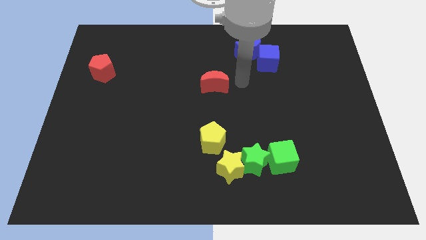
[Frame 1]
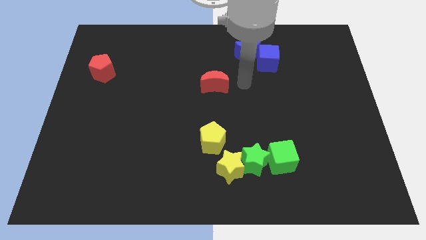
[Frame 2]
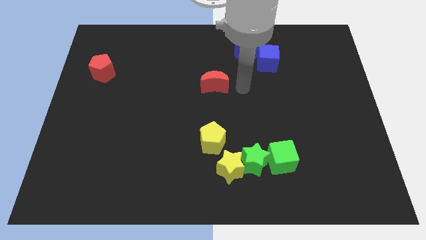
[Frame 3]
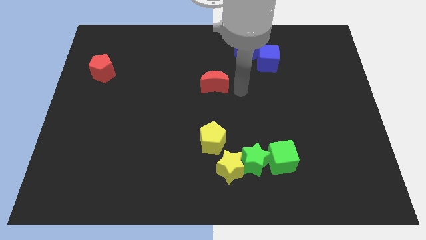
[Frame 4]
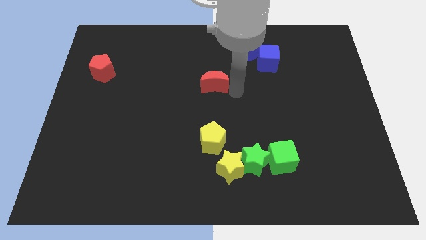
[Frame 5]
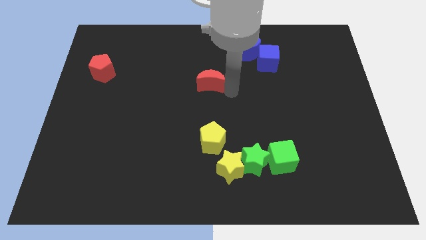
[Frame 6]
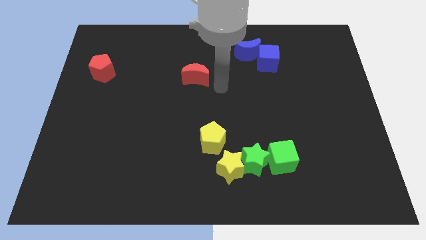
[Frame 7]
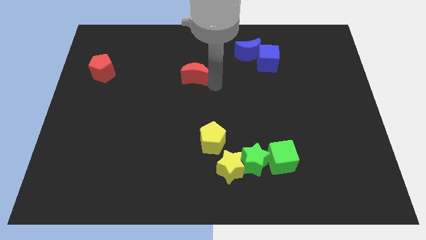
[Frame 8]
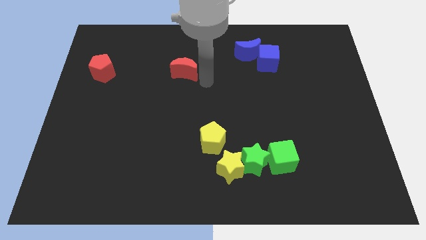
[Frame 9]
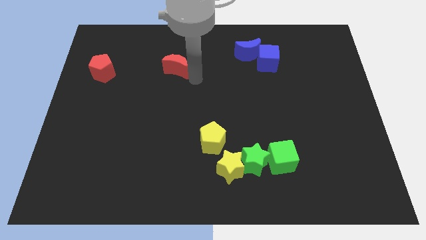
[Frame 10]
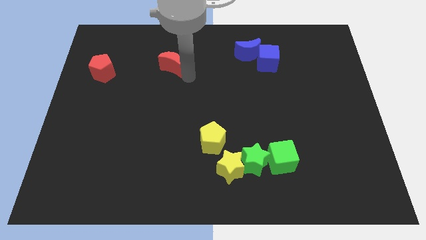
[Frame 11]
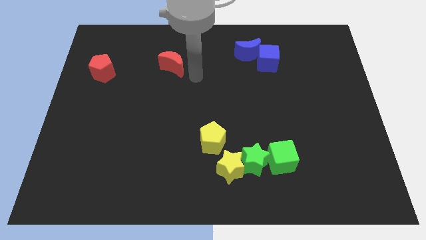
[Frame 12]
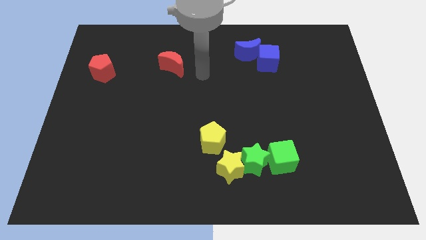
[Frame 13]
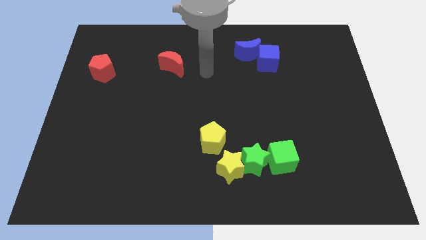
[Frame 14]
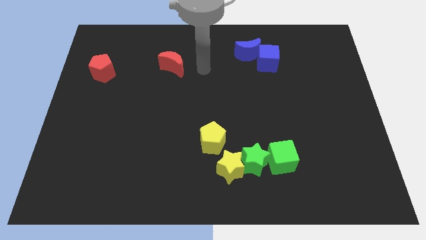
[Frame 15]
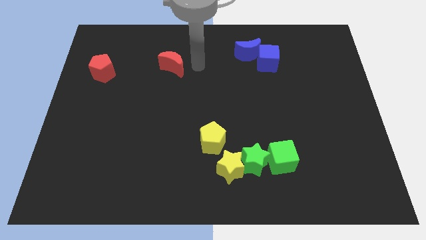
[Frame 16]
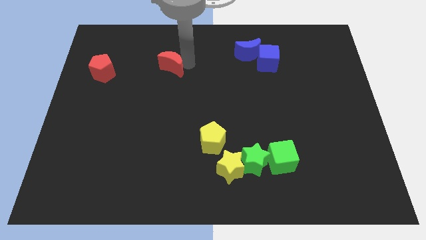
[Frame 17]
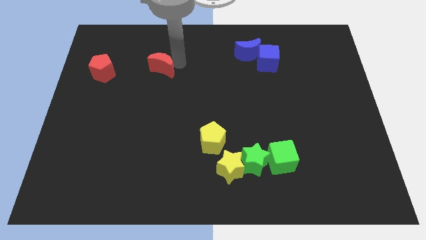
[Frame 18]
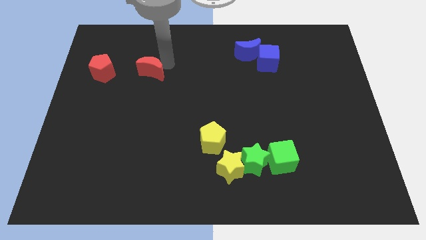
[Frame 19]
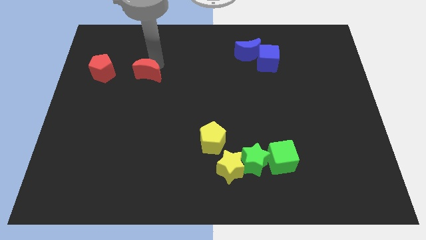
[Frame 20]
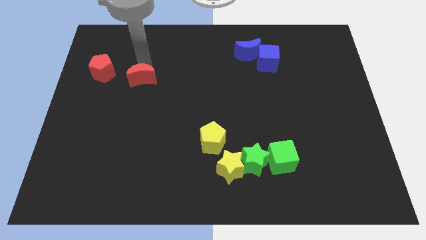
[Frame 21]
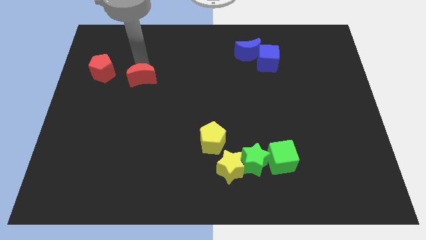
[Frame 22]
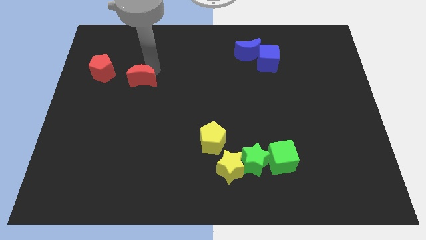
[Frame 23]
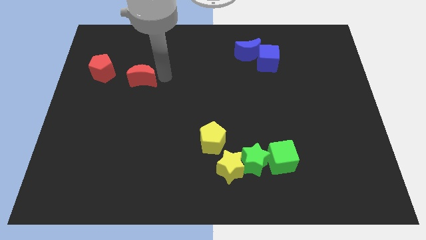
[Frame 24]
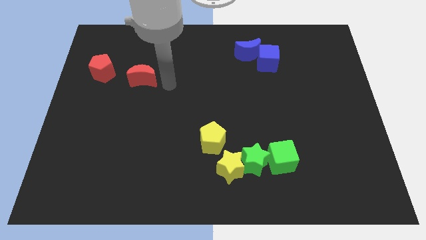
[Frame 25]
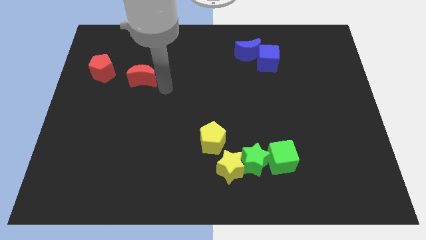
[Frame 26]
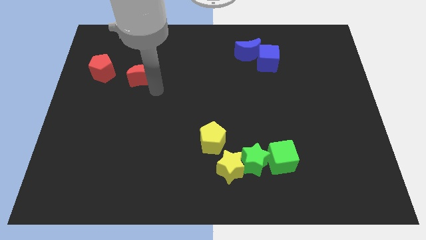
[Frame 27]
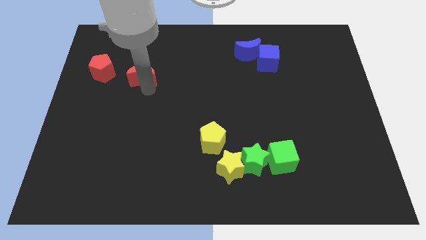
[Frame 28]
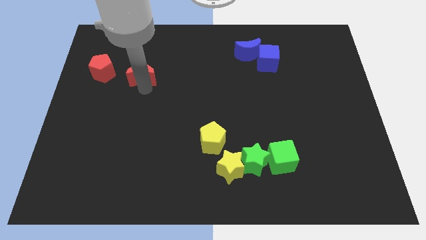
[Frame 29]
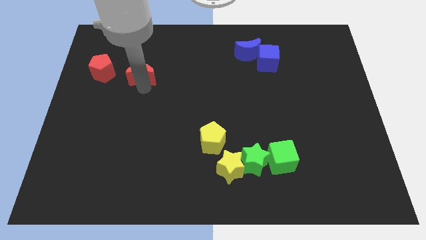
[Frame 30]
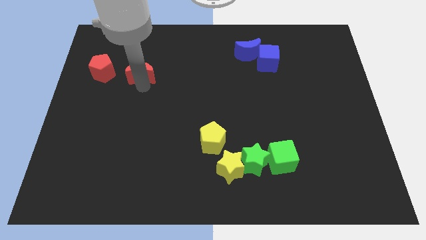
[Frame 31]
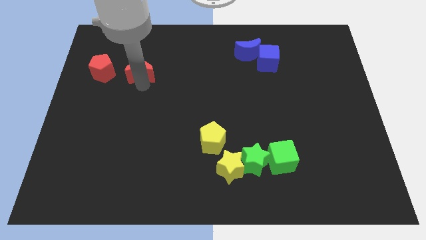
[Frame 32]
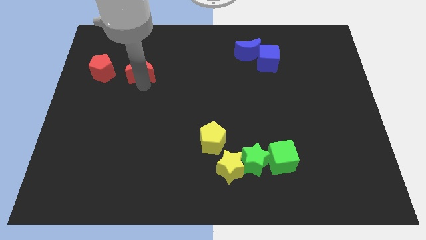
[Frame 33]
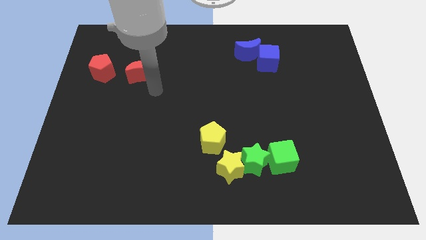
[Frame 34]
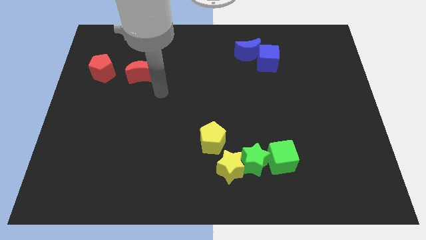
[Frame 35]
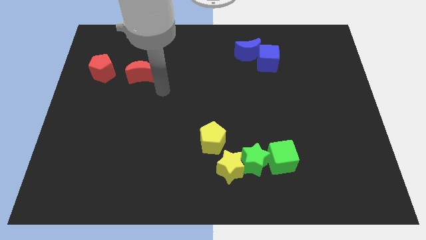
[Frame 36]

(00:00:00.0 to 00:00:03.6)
move the rd moon towards the right side of the red pentagon

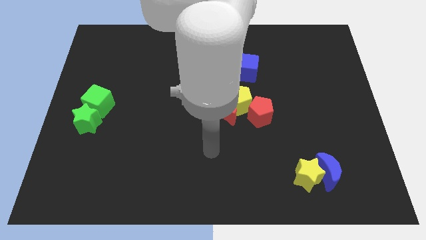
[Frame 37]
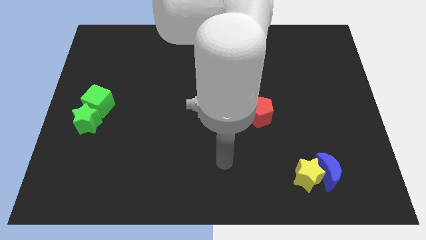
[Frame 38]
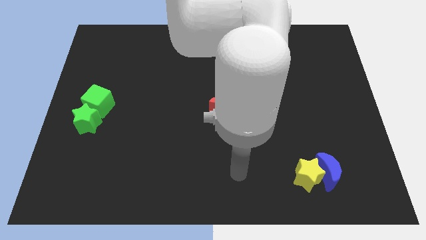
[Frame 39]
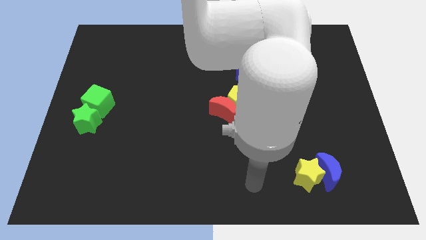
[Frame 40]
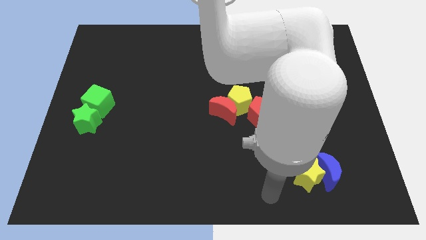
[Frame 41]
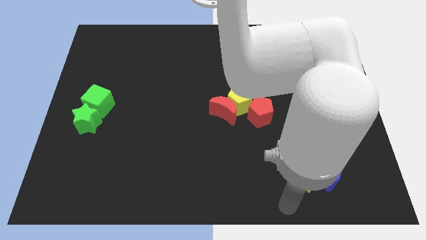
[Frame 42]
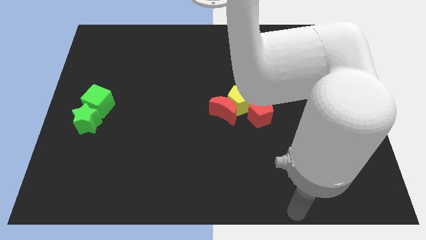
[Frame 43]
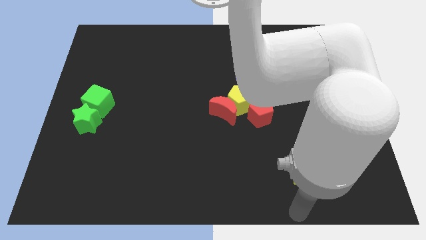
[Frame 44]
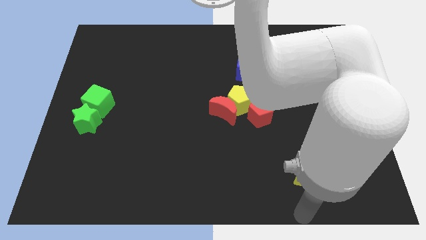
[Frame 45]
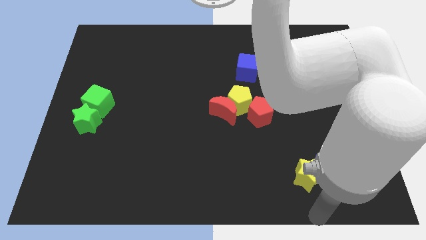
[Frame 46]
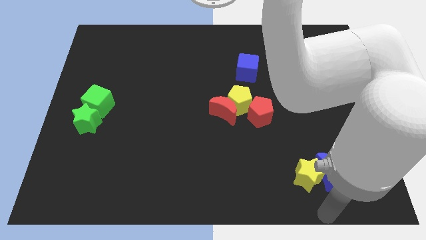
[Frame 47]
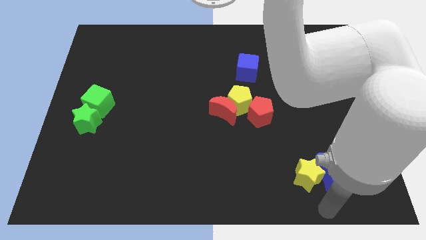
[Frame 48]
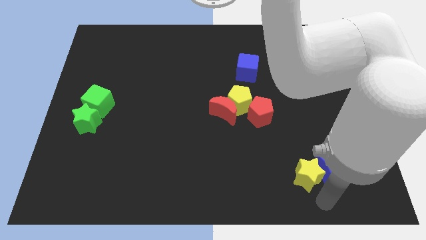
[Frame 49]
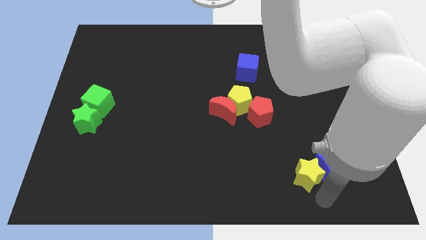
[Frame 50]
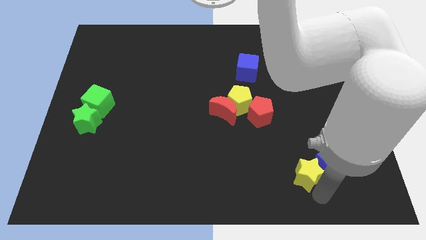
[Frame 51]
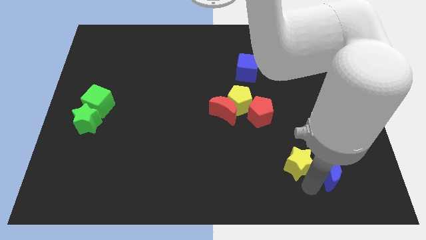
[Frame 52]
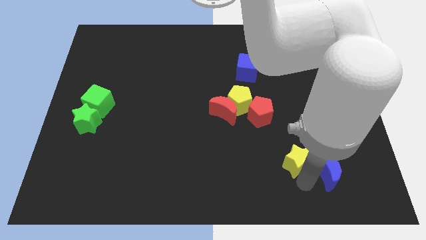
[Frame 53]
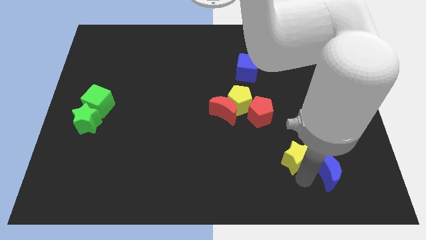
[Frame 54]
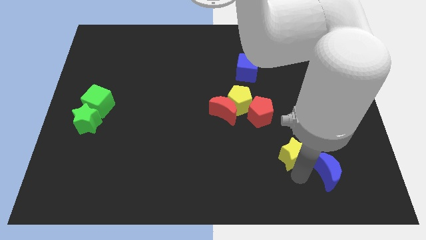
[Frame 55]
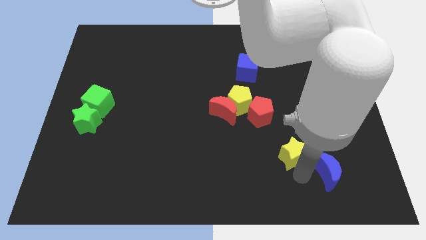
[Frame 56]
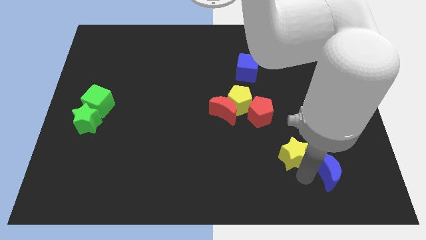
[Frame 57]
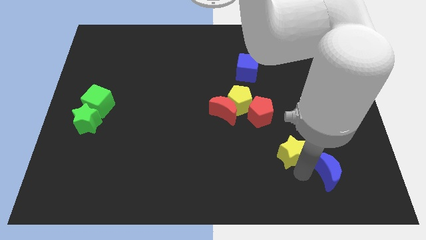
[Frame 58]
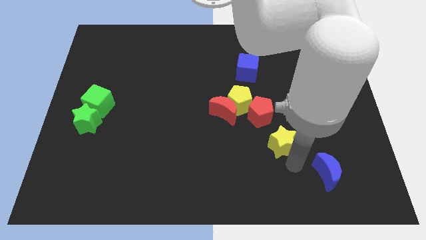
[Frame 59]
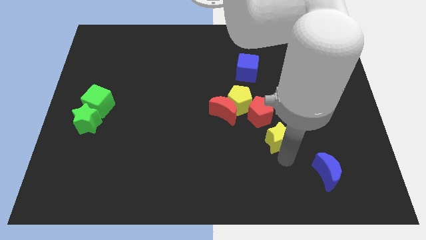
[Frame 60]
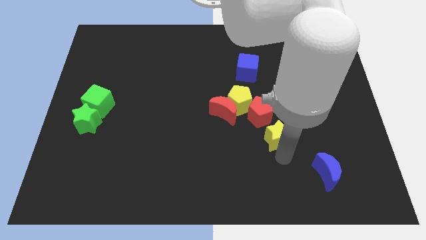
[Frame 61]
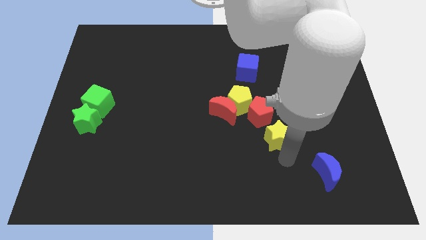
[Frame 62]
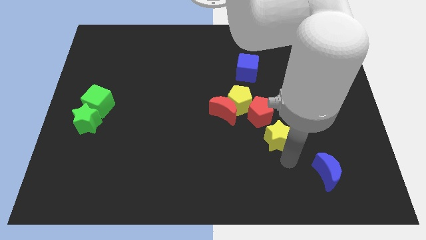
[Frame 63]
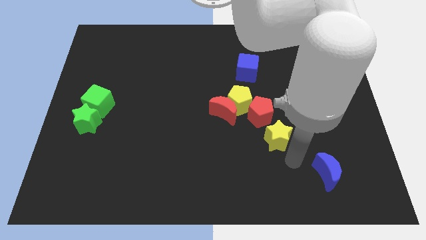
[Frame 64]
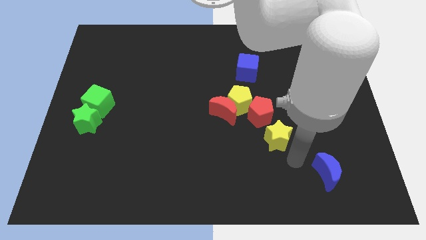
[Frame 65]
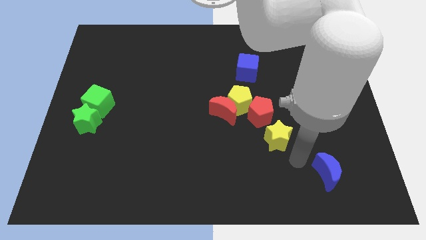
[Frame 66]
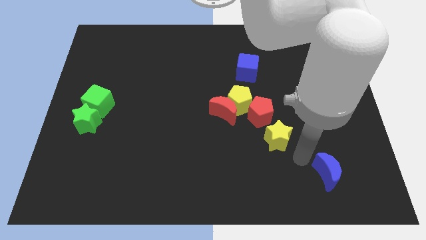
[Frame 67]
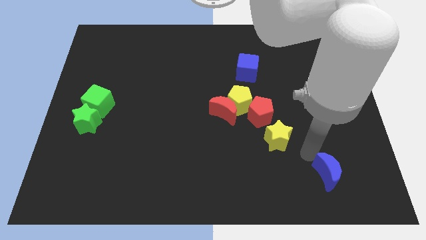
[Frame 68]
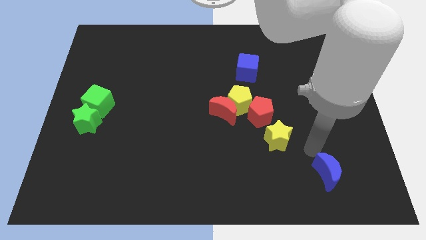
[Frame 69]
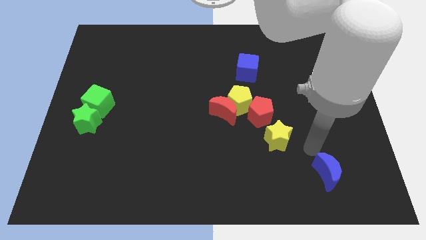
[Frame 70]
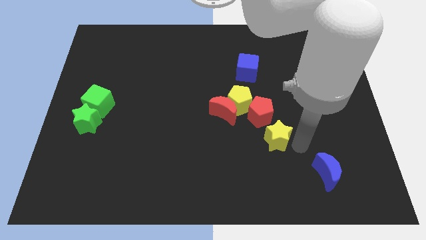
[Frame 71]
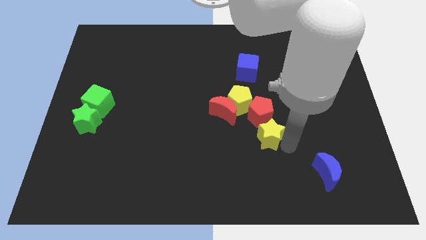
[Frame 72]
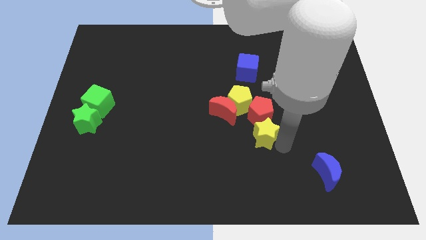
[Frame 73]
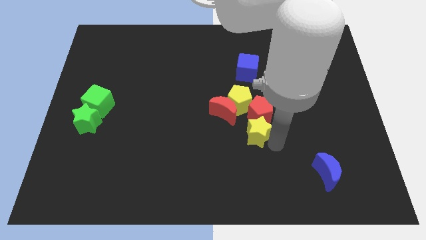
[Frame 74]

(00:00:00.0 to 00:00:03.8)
place the yellow star below the red pentagon

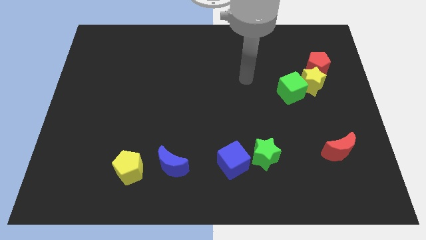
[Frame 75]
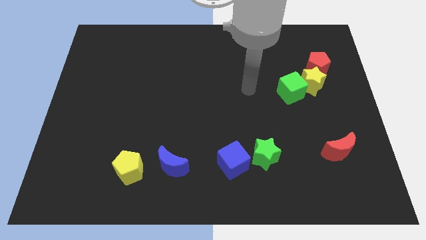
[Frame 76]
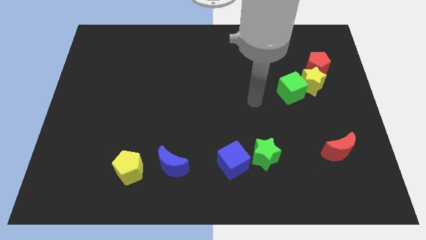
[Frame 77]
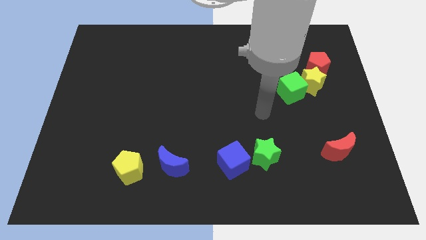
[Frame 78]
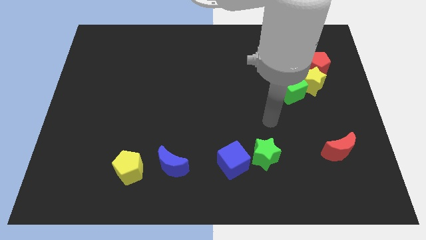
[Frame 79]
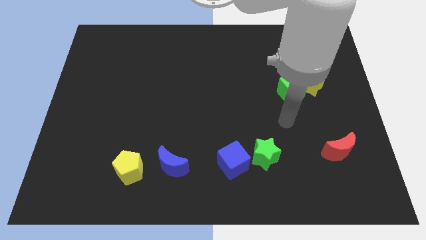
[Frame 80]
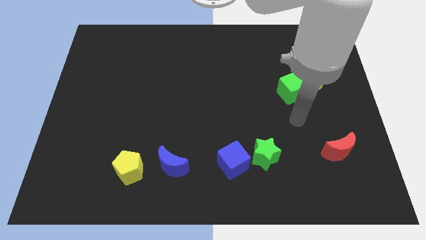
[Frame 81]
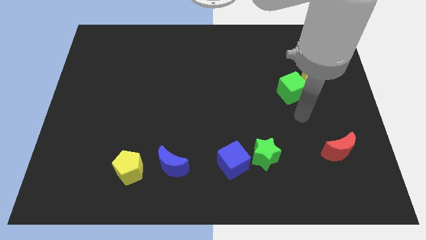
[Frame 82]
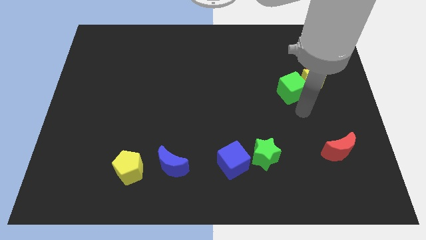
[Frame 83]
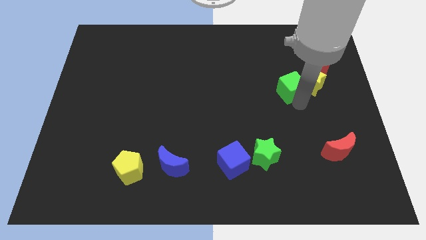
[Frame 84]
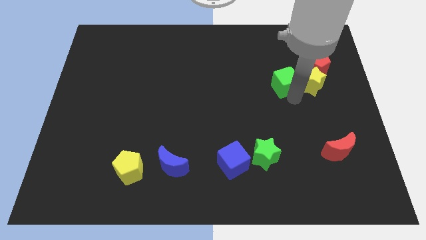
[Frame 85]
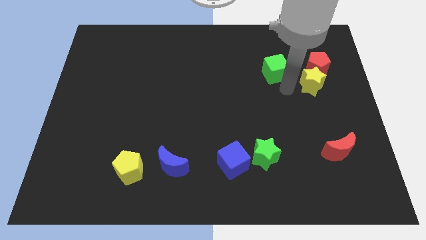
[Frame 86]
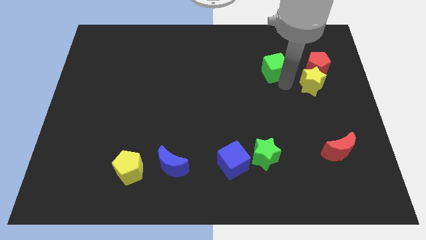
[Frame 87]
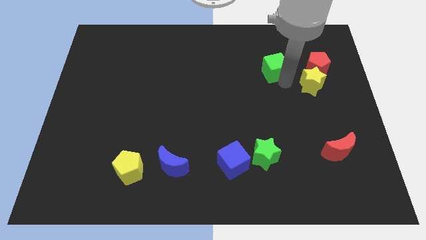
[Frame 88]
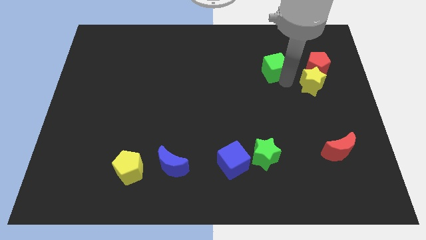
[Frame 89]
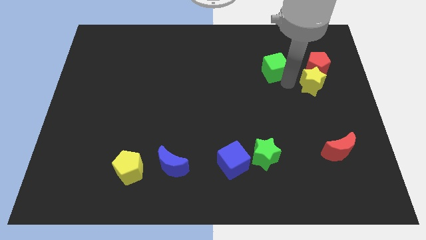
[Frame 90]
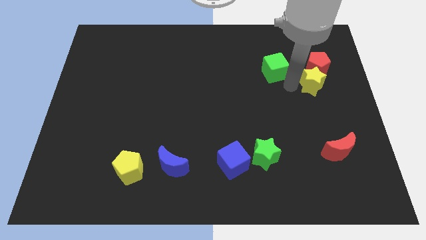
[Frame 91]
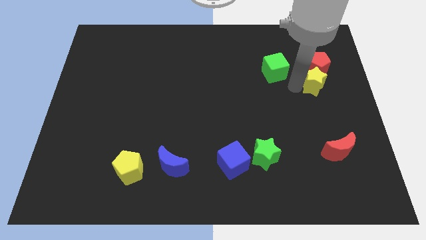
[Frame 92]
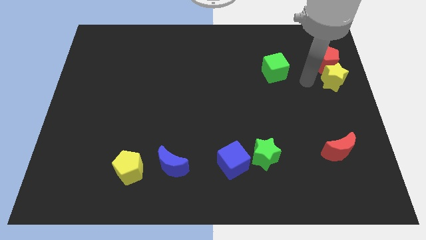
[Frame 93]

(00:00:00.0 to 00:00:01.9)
separate green cube from the yellow star
